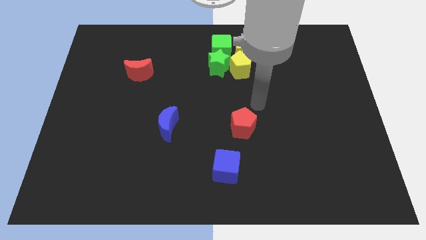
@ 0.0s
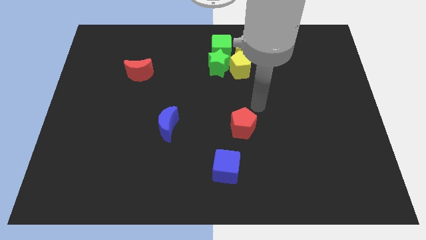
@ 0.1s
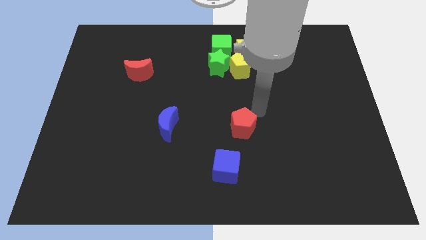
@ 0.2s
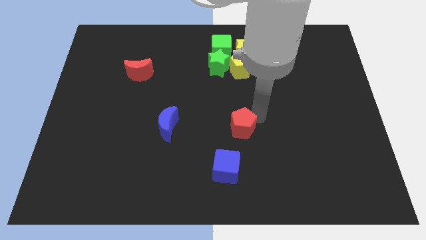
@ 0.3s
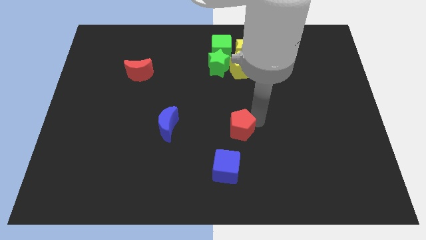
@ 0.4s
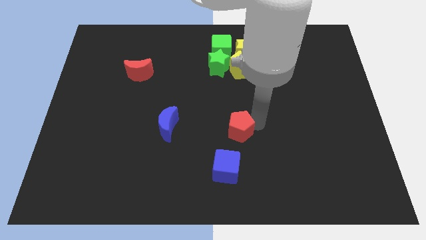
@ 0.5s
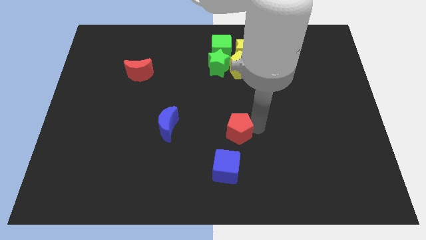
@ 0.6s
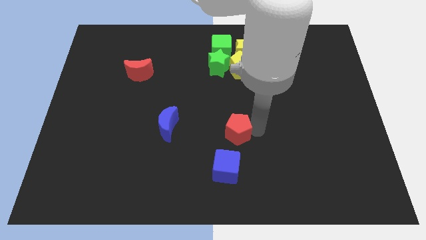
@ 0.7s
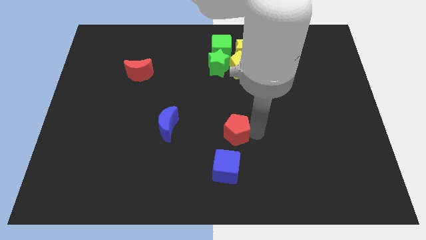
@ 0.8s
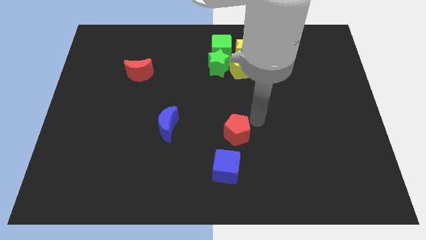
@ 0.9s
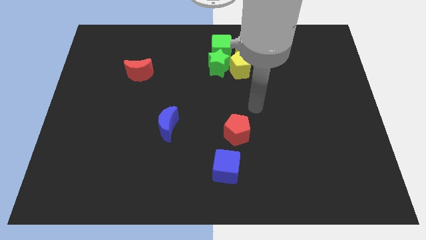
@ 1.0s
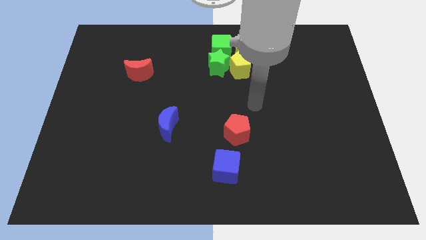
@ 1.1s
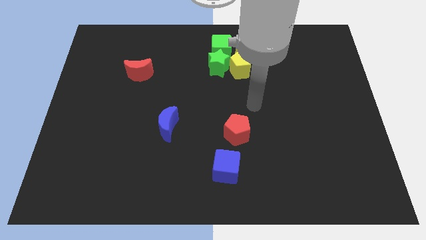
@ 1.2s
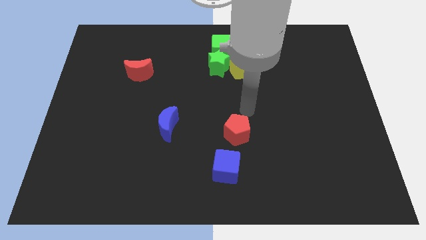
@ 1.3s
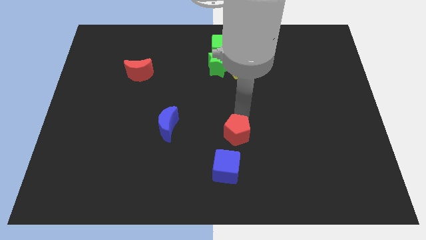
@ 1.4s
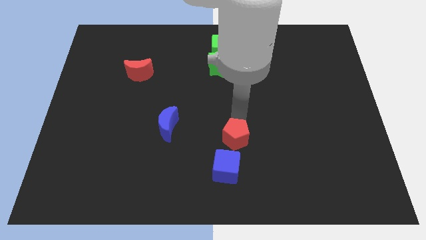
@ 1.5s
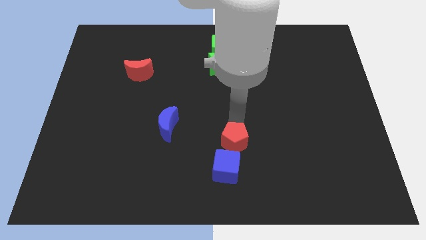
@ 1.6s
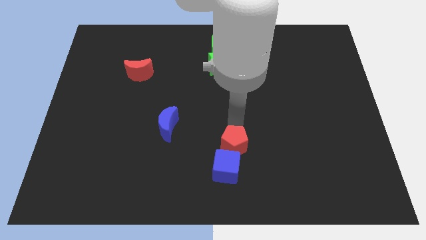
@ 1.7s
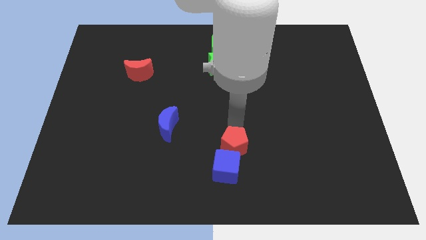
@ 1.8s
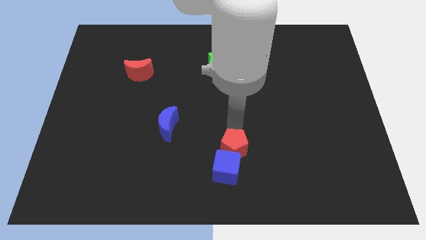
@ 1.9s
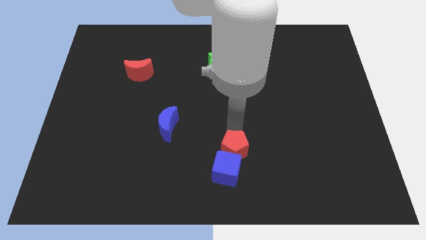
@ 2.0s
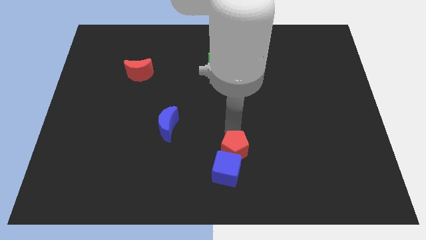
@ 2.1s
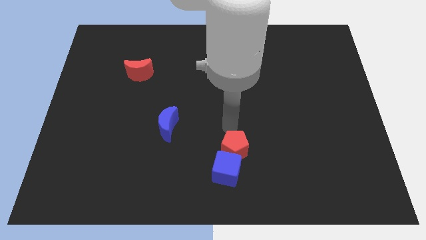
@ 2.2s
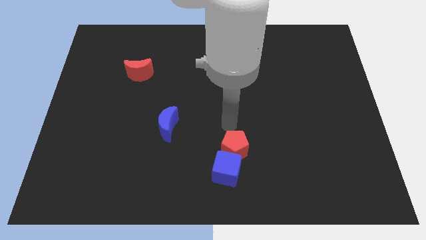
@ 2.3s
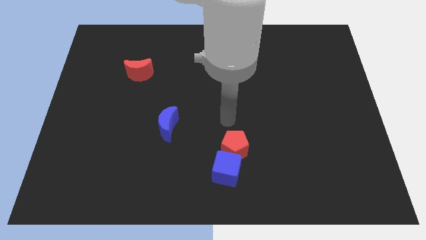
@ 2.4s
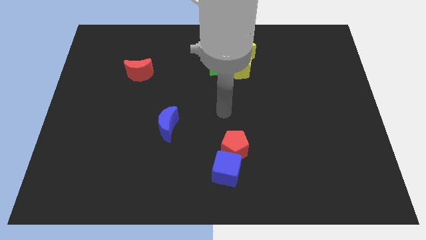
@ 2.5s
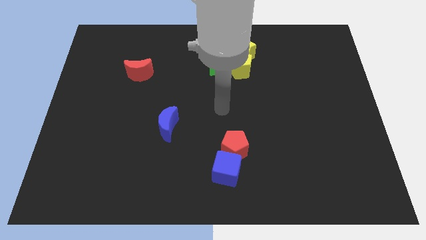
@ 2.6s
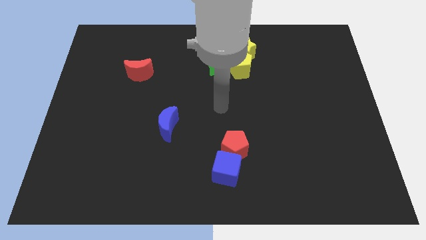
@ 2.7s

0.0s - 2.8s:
push the red pentagon into the blue cube

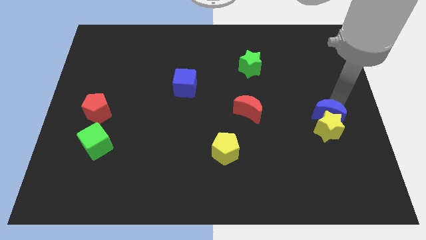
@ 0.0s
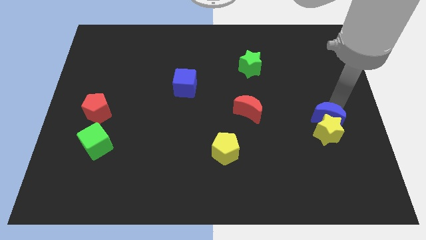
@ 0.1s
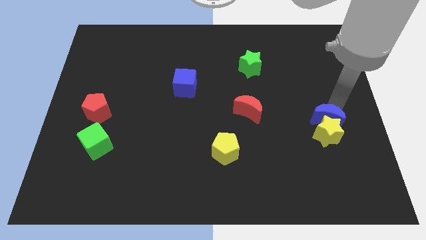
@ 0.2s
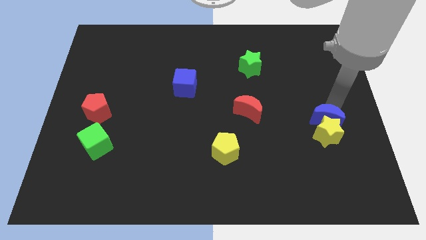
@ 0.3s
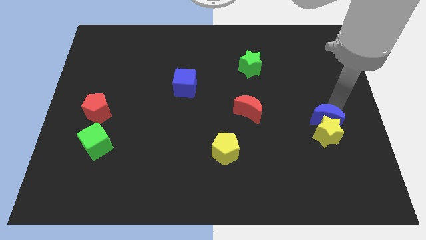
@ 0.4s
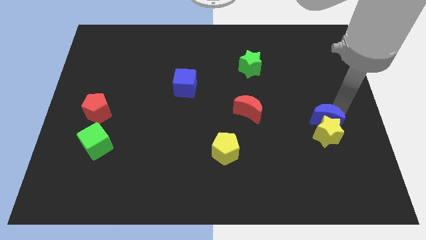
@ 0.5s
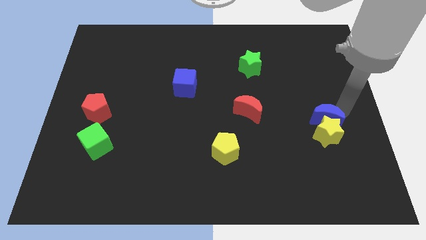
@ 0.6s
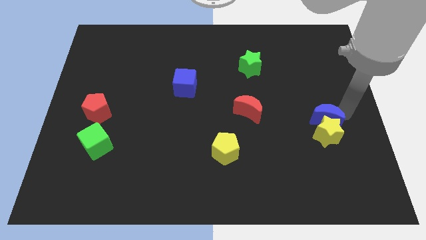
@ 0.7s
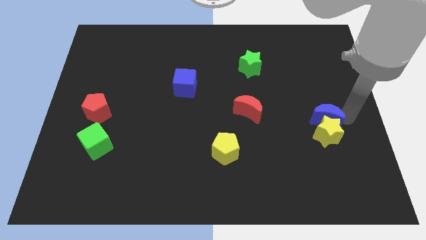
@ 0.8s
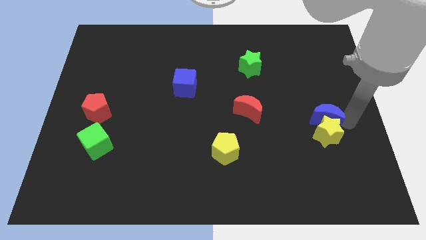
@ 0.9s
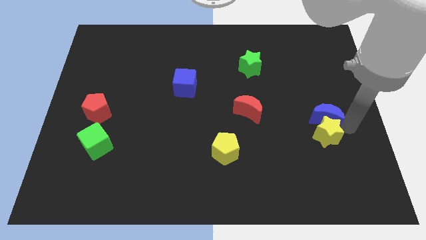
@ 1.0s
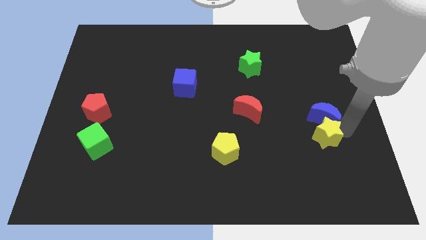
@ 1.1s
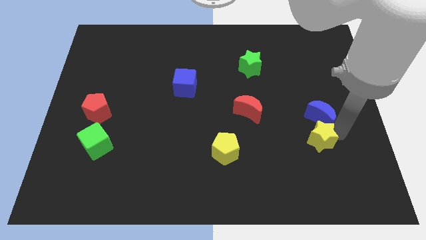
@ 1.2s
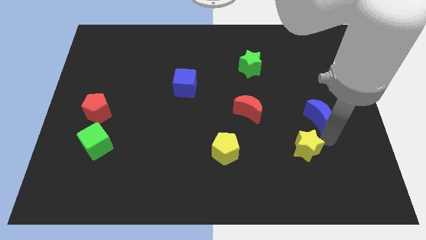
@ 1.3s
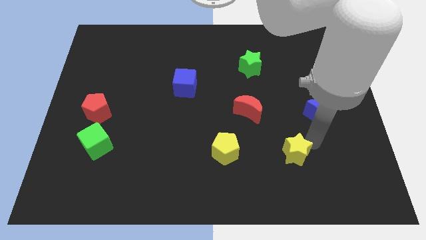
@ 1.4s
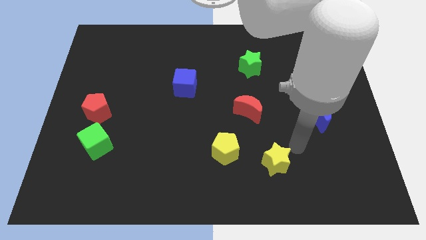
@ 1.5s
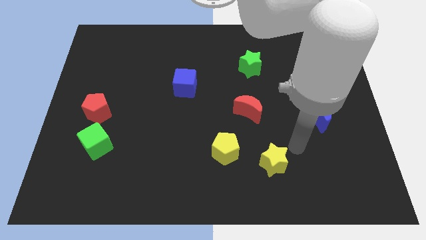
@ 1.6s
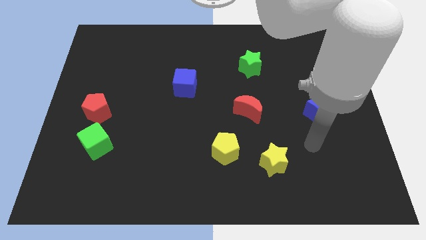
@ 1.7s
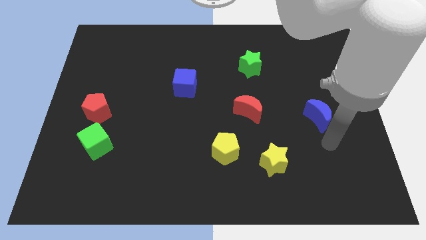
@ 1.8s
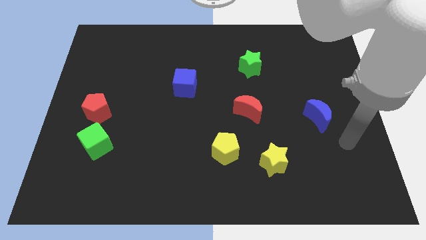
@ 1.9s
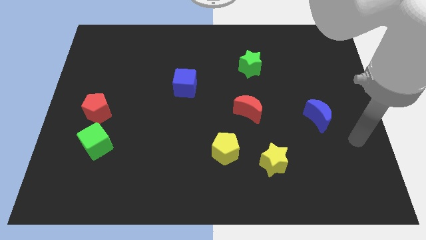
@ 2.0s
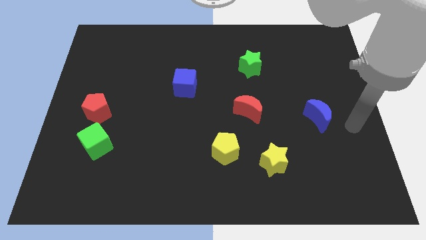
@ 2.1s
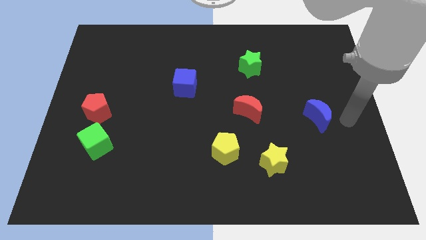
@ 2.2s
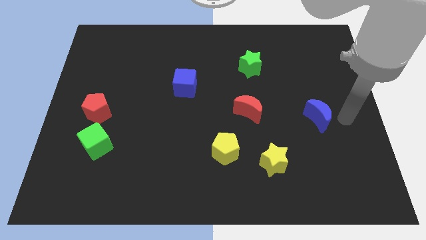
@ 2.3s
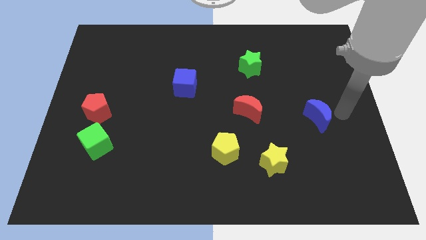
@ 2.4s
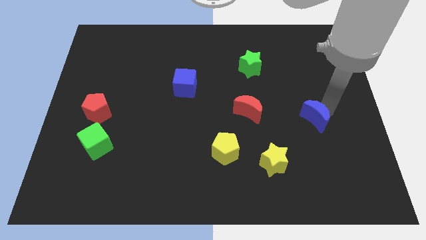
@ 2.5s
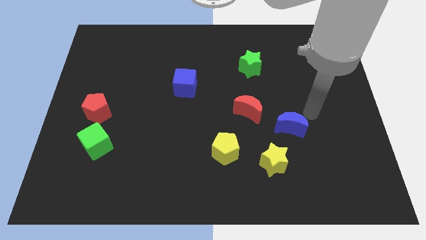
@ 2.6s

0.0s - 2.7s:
separate the yellow star from the blue moon

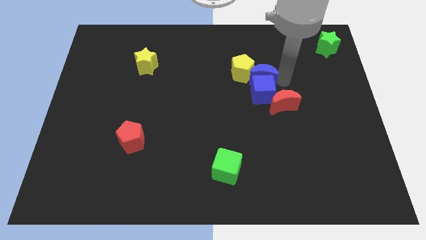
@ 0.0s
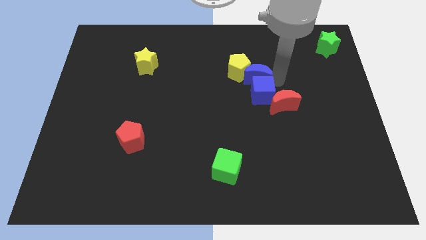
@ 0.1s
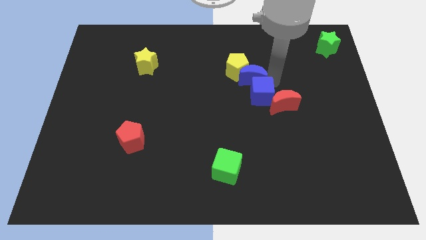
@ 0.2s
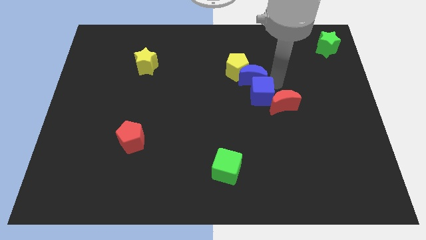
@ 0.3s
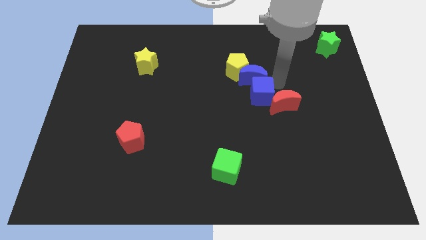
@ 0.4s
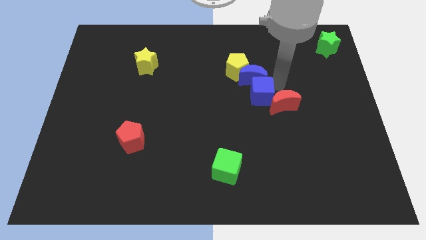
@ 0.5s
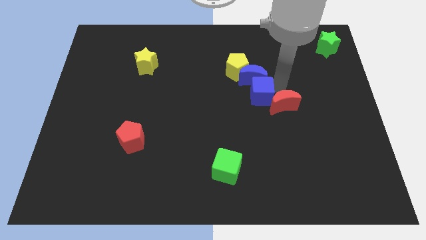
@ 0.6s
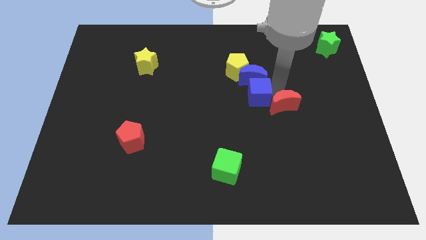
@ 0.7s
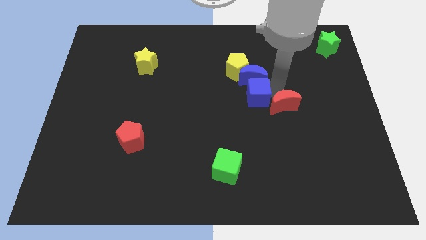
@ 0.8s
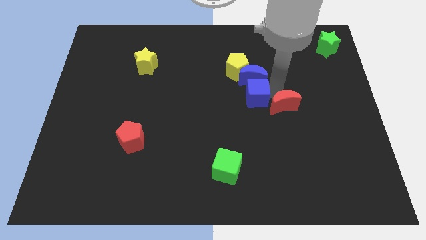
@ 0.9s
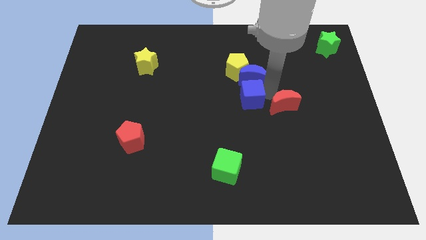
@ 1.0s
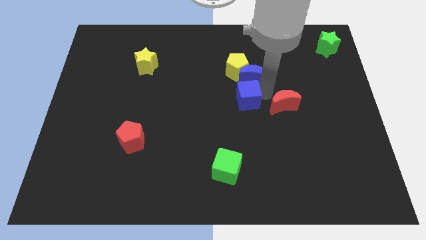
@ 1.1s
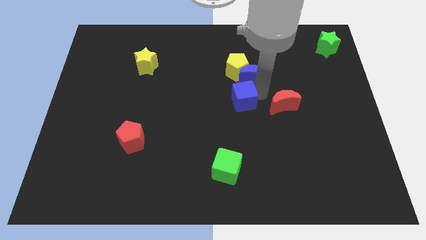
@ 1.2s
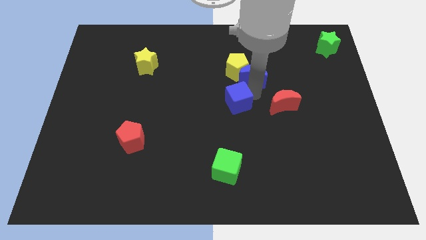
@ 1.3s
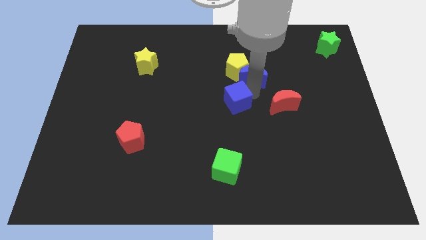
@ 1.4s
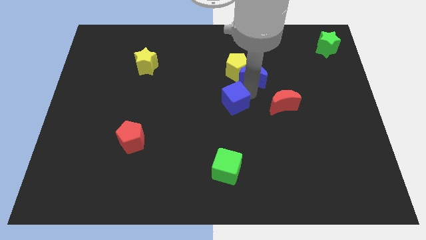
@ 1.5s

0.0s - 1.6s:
separate the blue cube from the blue crescent

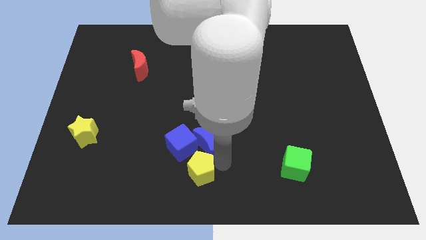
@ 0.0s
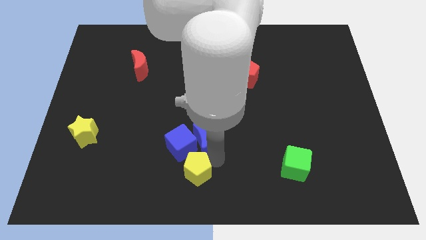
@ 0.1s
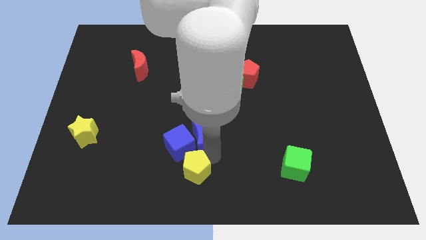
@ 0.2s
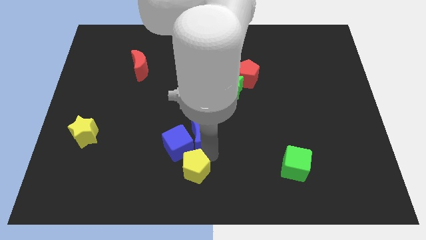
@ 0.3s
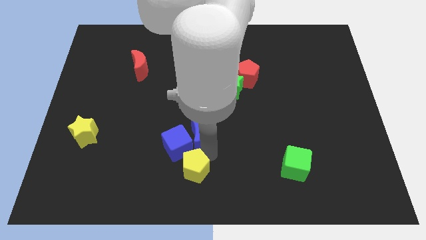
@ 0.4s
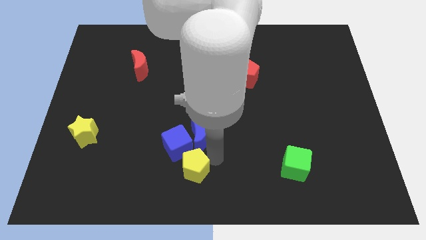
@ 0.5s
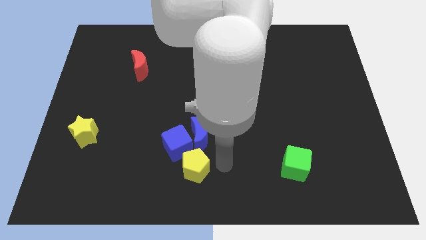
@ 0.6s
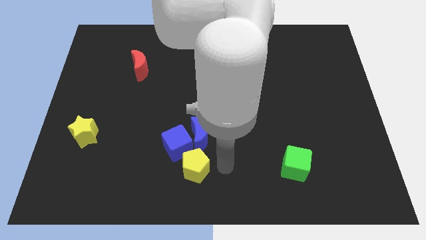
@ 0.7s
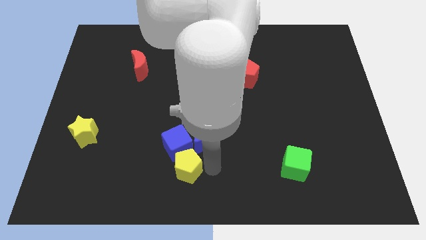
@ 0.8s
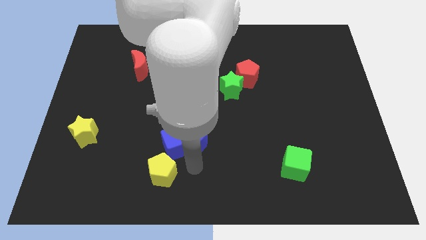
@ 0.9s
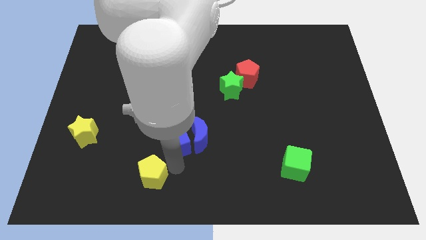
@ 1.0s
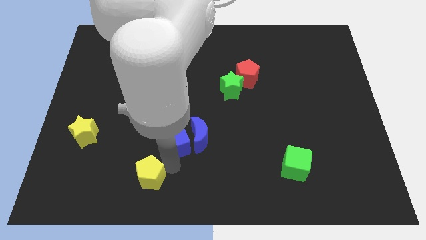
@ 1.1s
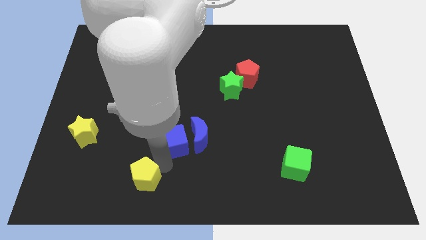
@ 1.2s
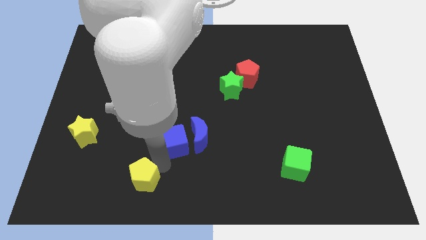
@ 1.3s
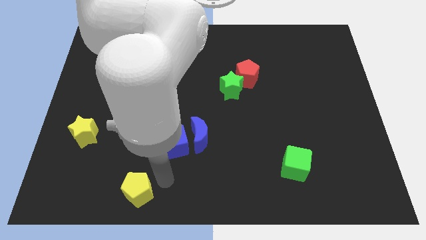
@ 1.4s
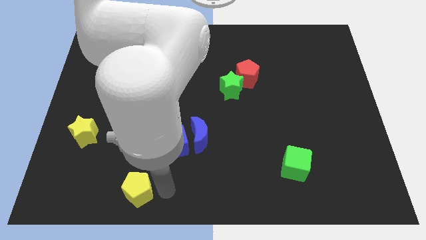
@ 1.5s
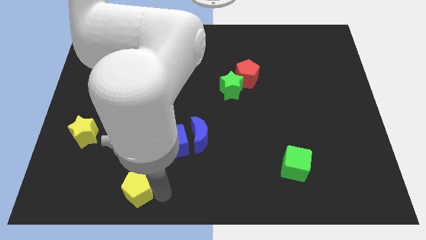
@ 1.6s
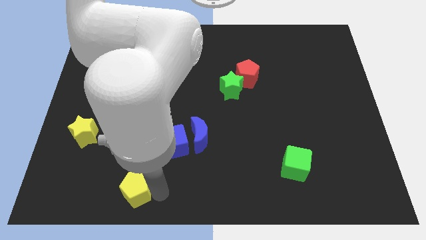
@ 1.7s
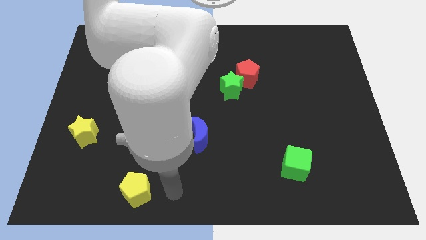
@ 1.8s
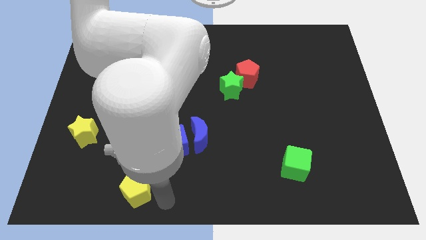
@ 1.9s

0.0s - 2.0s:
move the yellow pentagon diagonal below blue cube
